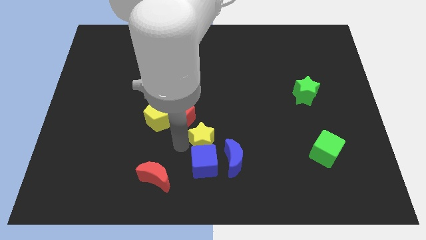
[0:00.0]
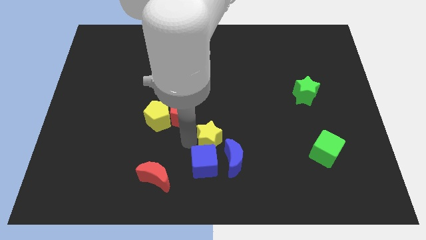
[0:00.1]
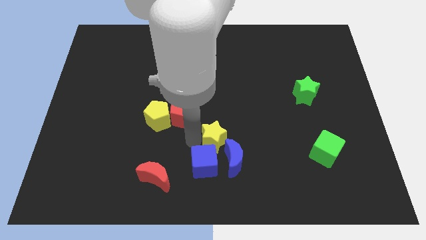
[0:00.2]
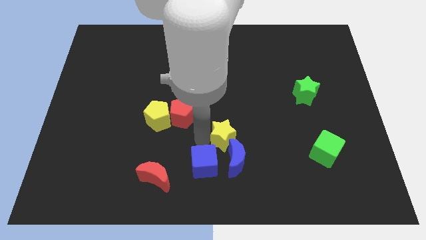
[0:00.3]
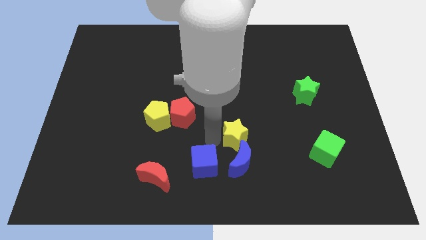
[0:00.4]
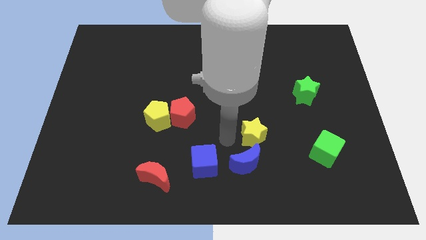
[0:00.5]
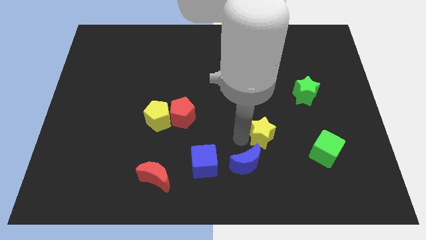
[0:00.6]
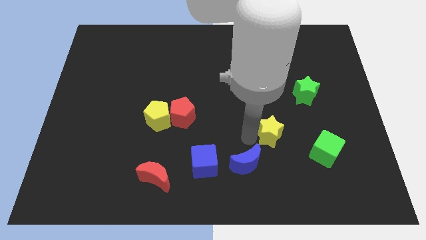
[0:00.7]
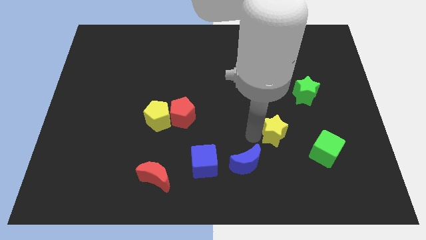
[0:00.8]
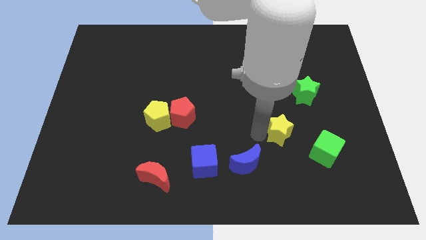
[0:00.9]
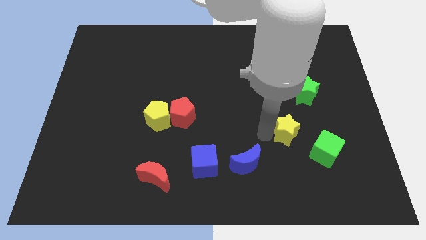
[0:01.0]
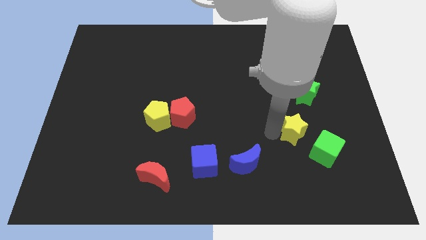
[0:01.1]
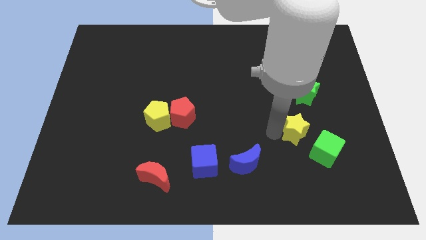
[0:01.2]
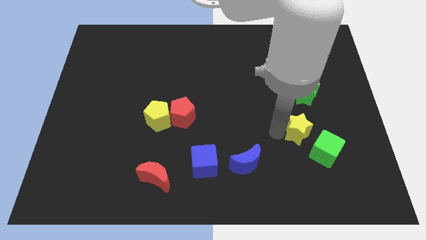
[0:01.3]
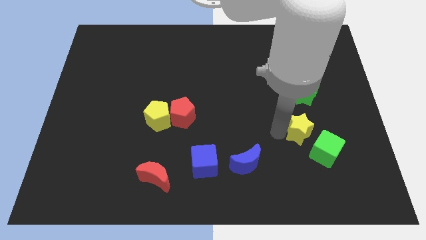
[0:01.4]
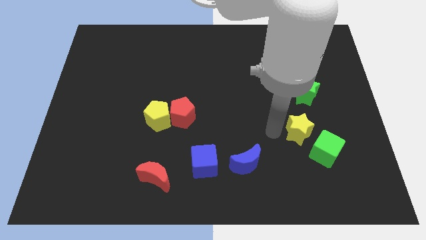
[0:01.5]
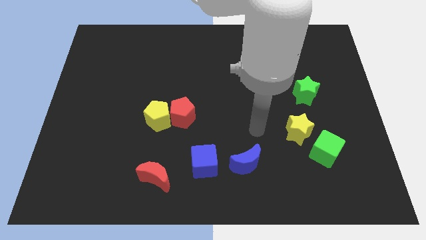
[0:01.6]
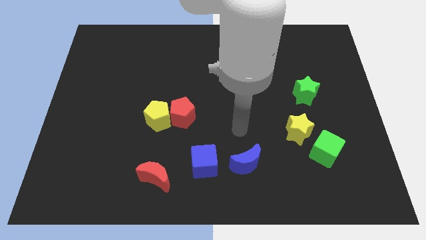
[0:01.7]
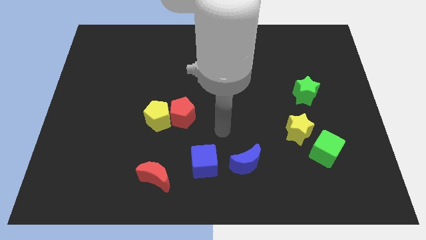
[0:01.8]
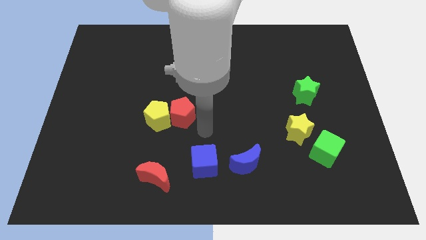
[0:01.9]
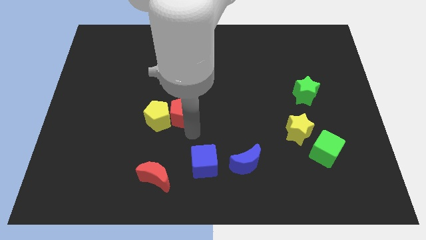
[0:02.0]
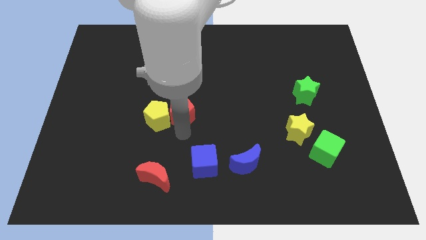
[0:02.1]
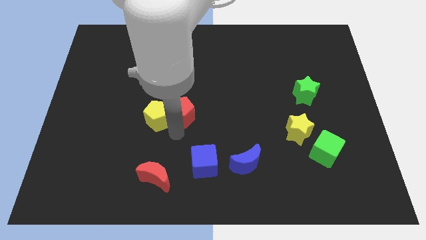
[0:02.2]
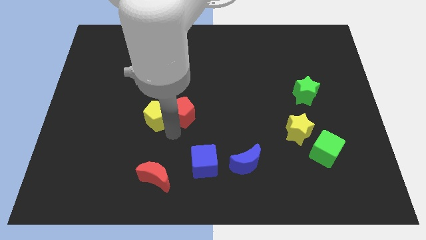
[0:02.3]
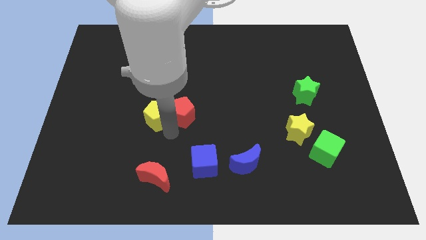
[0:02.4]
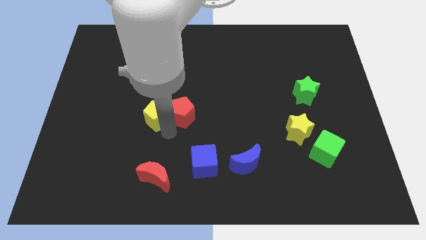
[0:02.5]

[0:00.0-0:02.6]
push the yellow star near the green cube

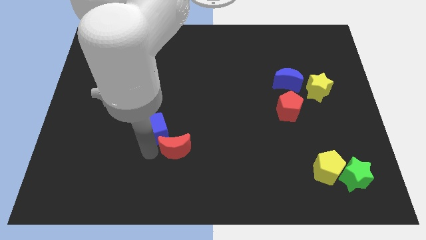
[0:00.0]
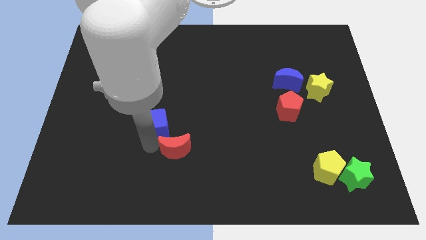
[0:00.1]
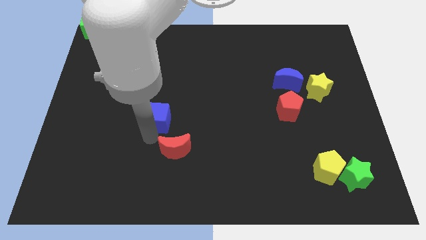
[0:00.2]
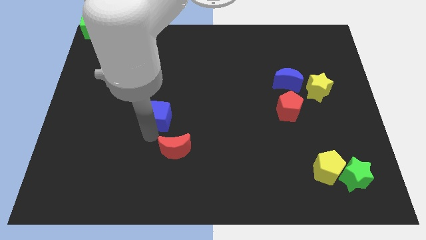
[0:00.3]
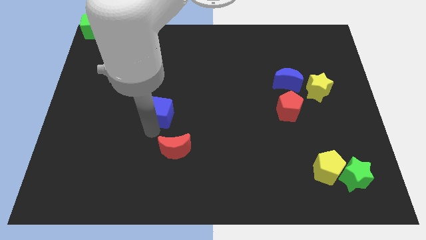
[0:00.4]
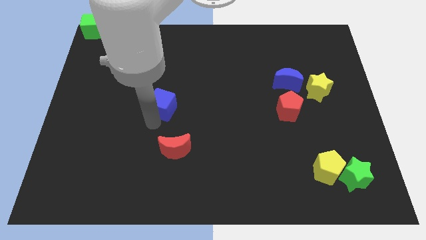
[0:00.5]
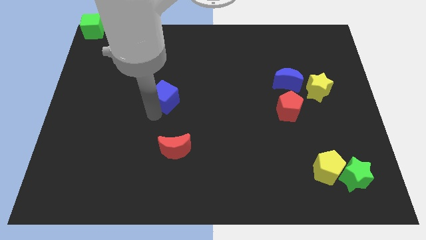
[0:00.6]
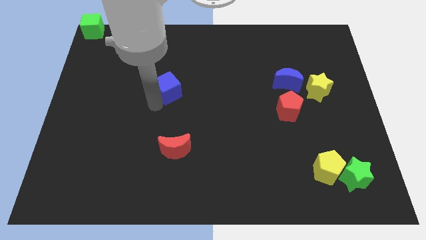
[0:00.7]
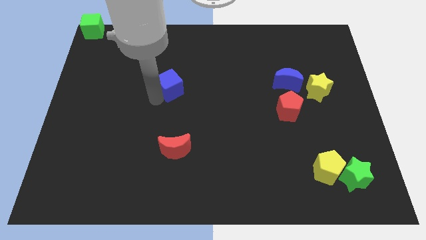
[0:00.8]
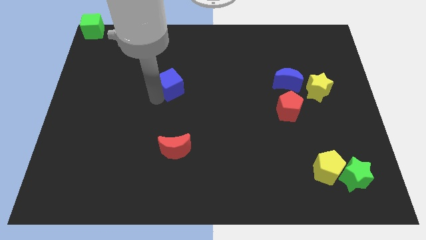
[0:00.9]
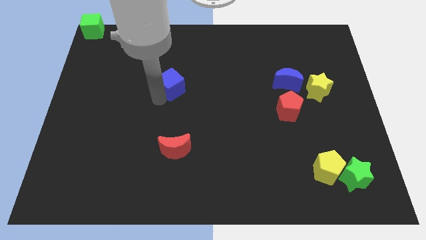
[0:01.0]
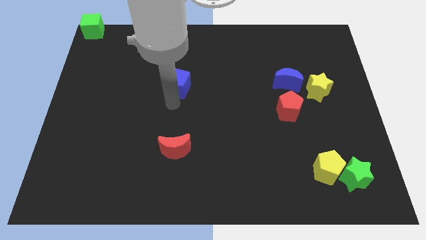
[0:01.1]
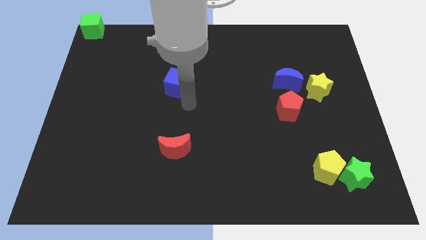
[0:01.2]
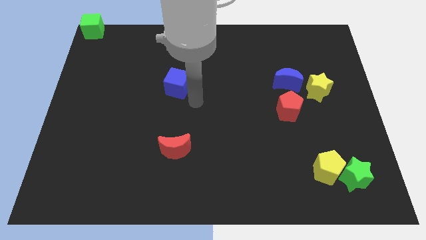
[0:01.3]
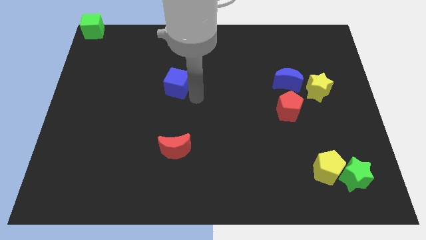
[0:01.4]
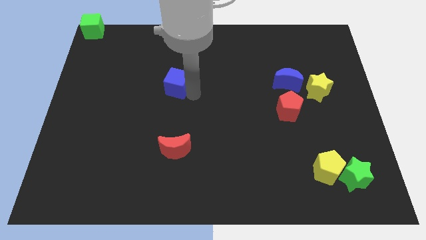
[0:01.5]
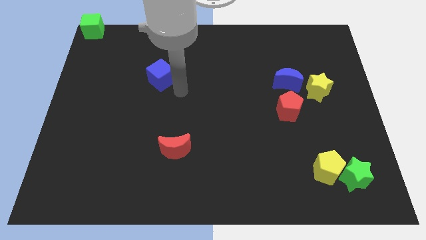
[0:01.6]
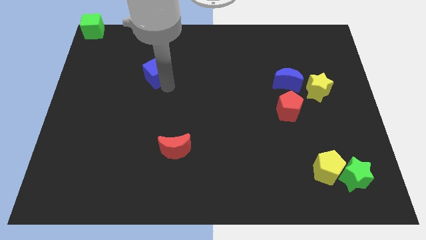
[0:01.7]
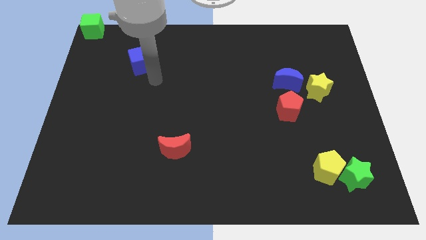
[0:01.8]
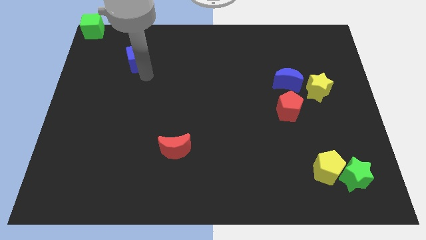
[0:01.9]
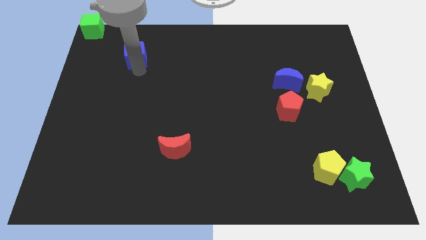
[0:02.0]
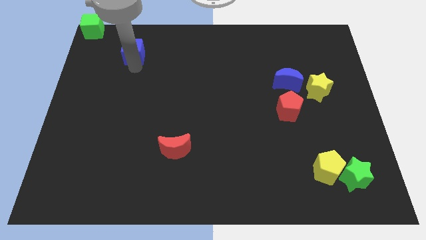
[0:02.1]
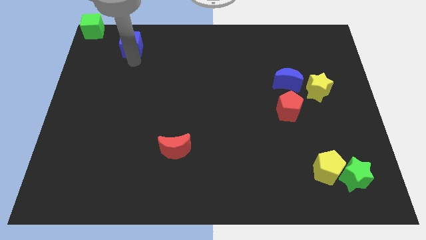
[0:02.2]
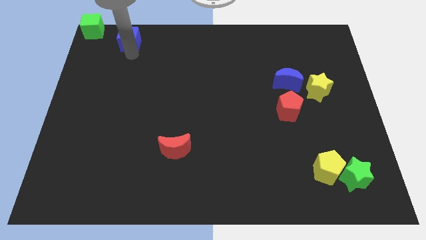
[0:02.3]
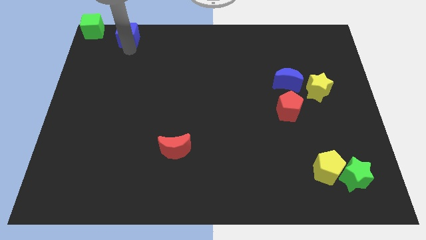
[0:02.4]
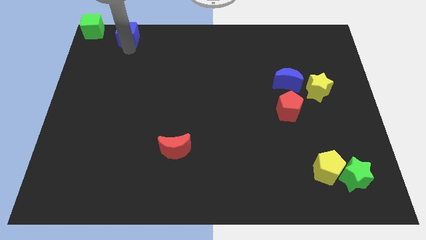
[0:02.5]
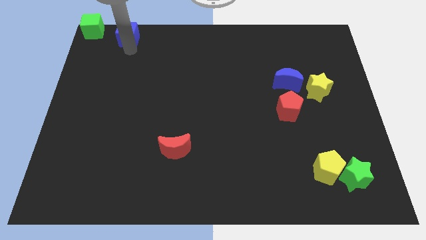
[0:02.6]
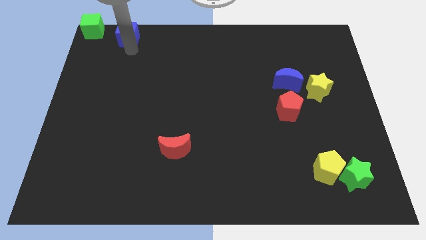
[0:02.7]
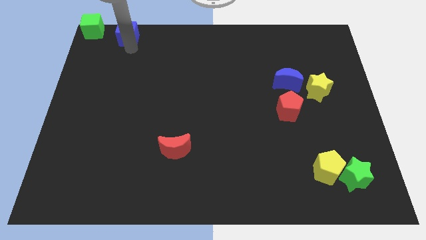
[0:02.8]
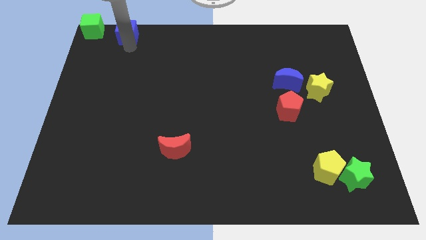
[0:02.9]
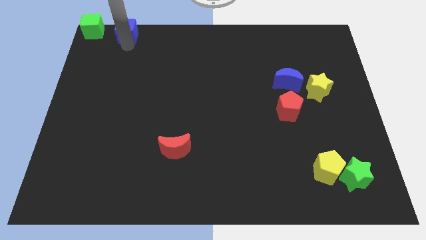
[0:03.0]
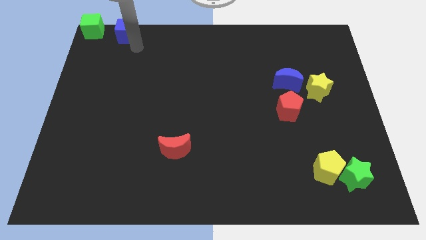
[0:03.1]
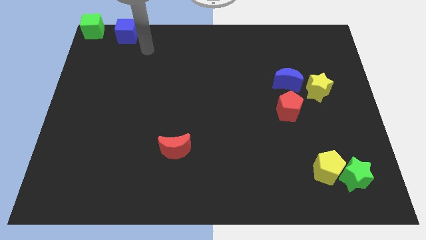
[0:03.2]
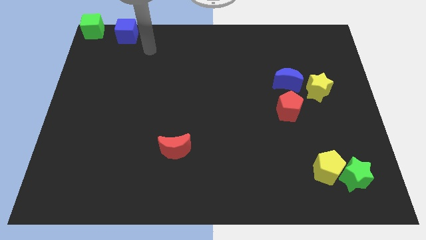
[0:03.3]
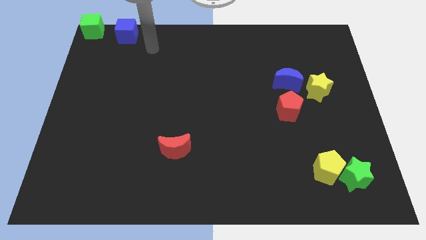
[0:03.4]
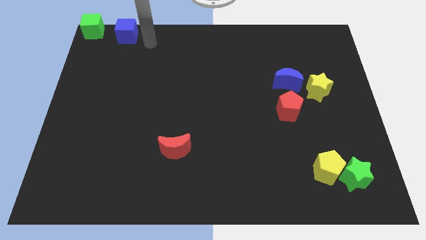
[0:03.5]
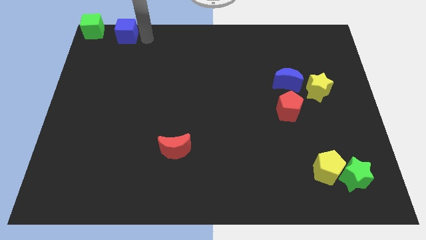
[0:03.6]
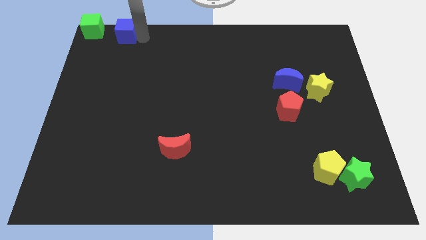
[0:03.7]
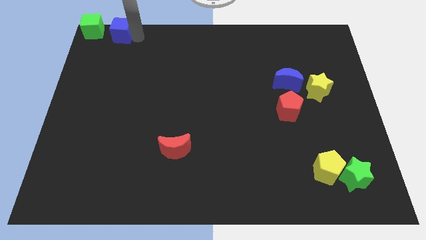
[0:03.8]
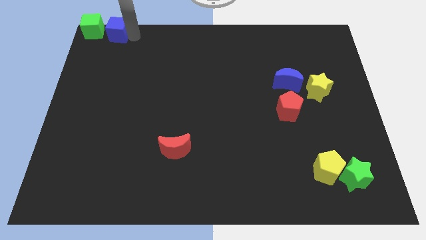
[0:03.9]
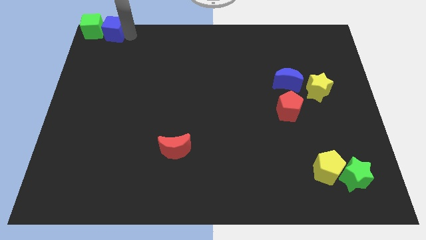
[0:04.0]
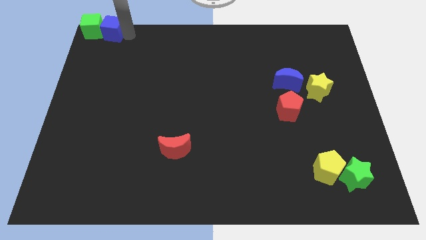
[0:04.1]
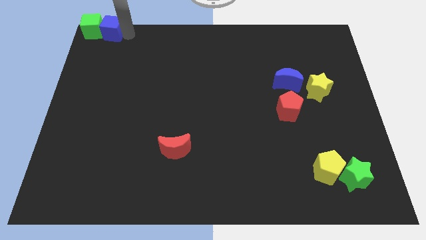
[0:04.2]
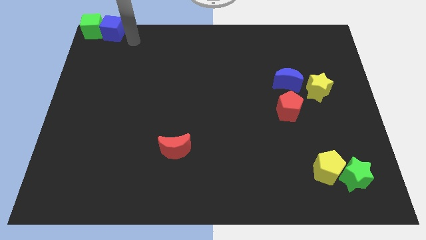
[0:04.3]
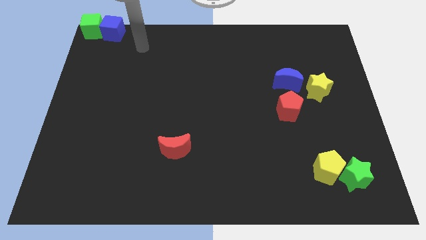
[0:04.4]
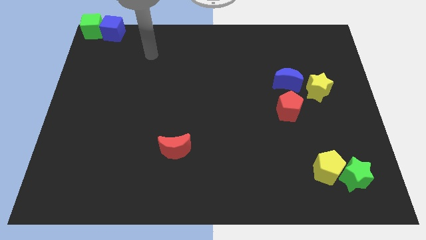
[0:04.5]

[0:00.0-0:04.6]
move the blue cube to the right side of the green cube

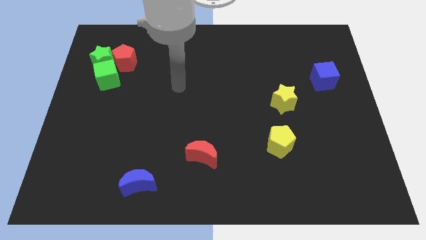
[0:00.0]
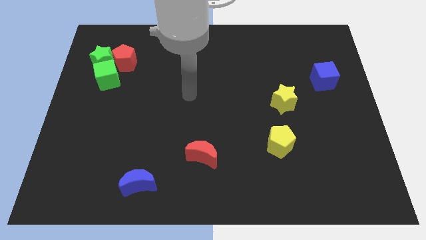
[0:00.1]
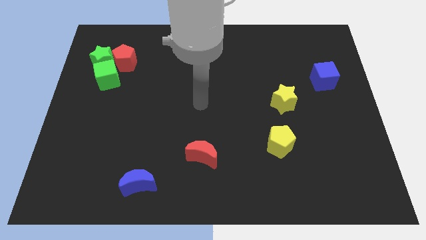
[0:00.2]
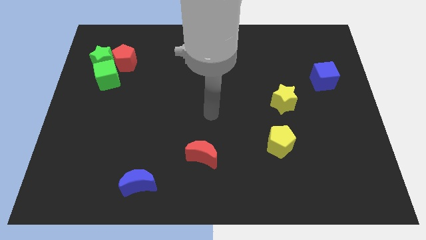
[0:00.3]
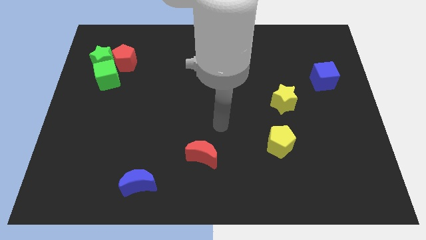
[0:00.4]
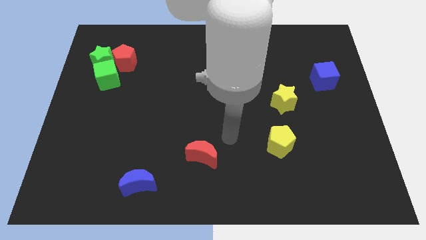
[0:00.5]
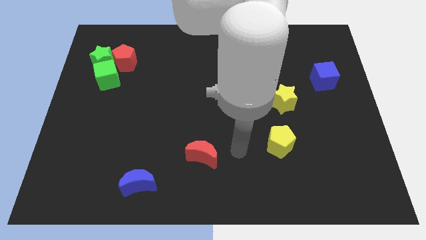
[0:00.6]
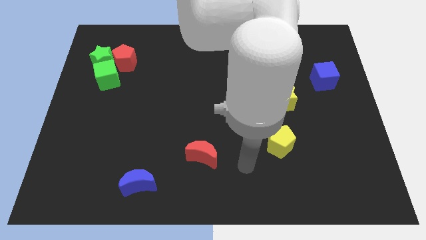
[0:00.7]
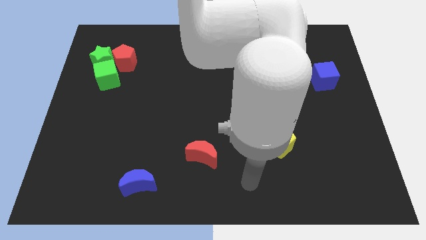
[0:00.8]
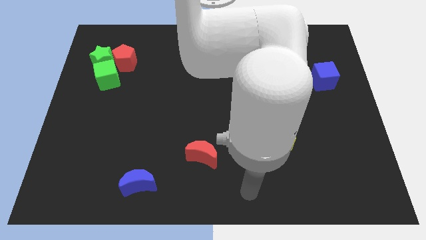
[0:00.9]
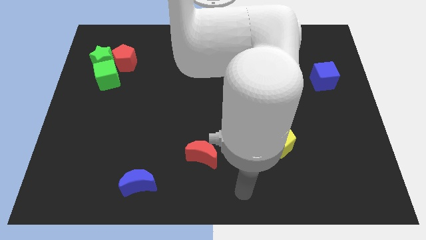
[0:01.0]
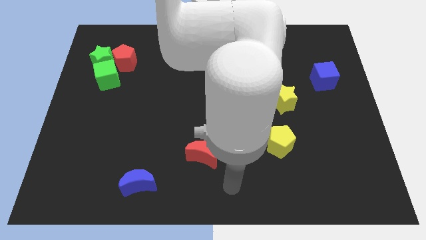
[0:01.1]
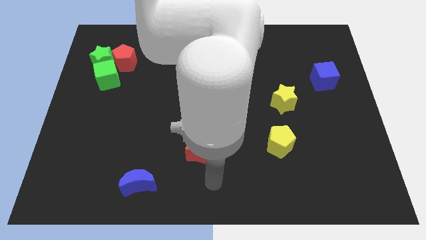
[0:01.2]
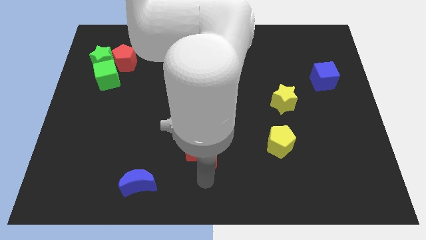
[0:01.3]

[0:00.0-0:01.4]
point your arm at the bottom of the red crescent

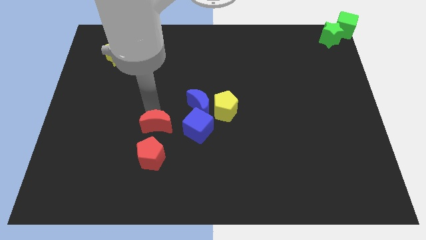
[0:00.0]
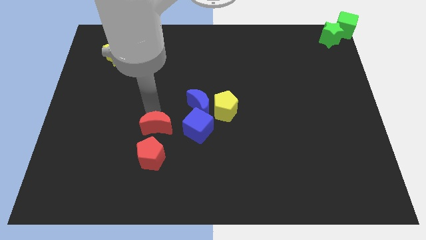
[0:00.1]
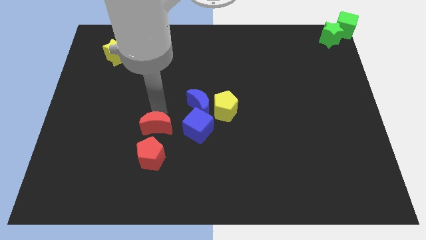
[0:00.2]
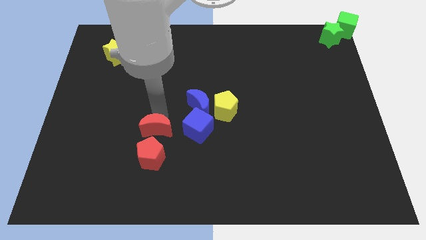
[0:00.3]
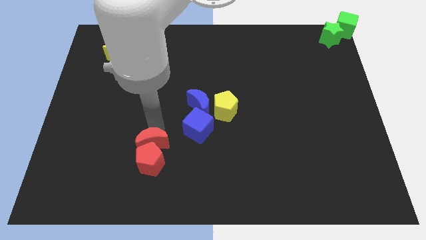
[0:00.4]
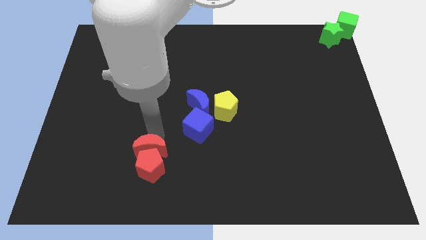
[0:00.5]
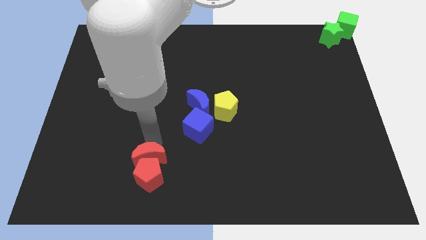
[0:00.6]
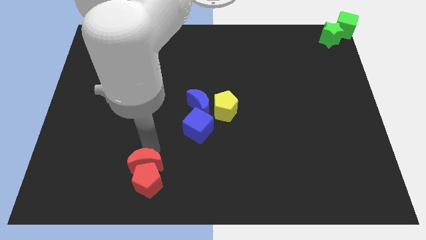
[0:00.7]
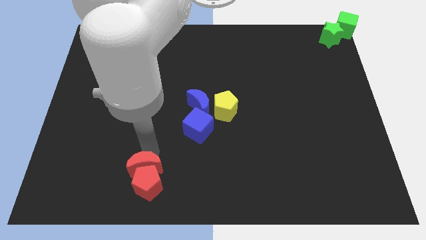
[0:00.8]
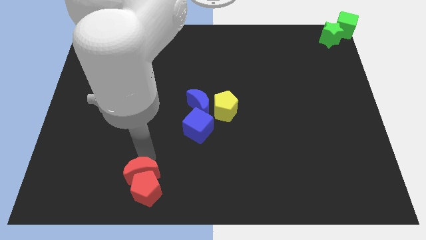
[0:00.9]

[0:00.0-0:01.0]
move the red crescent above the red pentagon
